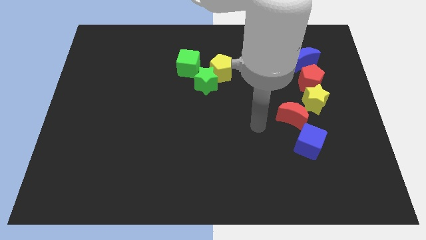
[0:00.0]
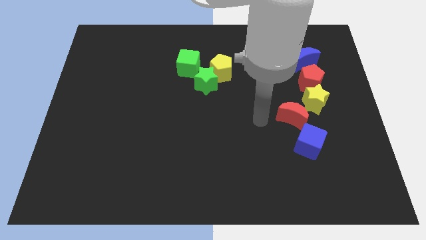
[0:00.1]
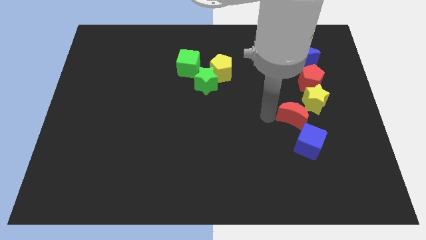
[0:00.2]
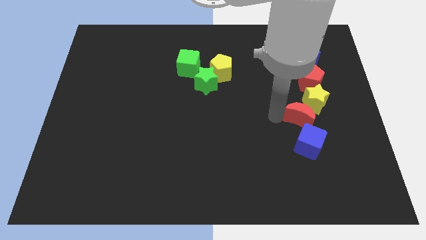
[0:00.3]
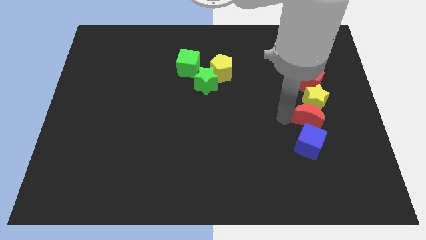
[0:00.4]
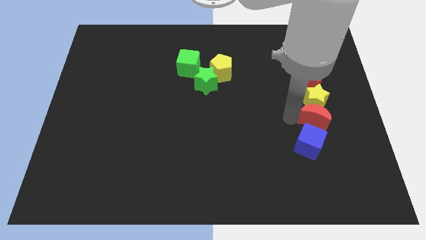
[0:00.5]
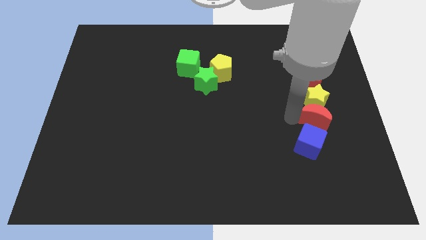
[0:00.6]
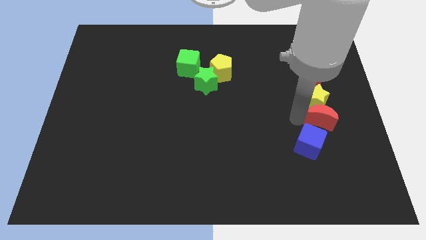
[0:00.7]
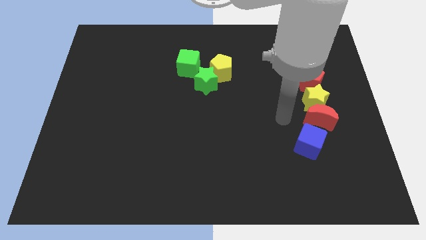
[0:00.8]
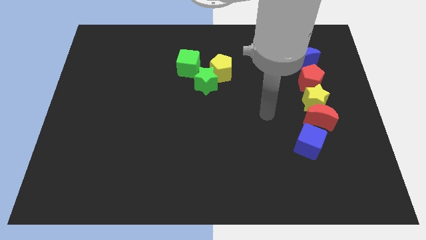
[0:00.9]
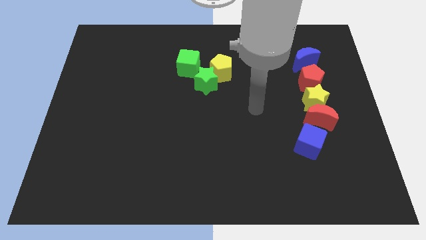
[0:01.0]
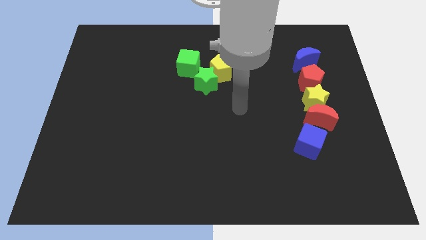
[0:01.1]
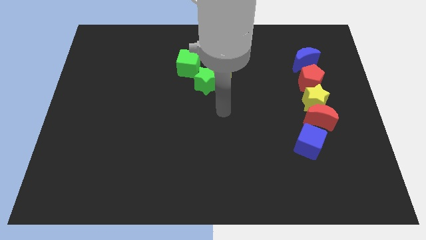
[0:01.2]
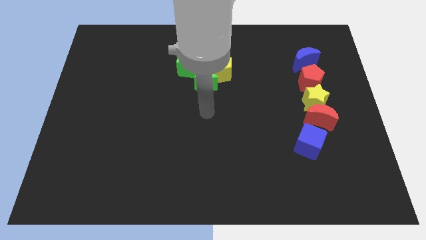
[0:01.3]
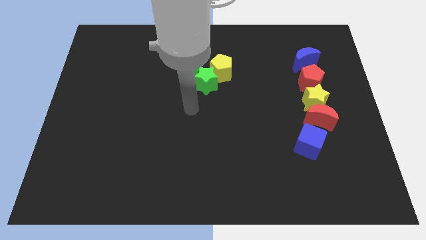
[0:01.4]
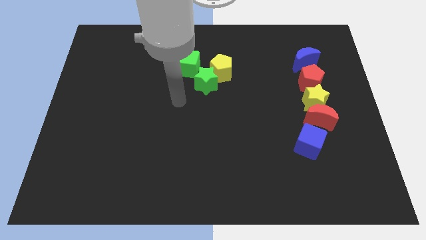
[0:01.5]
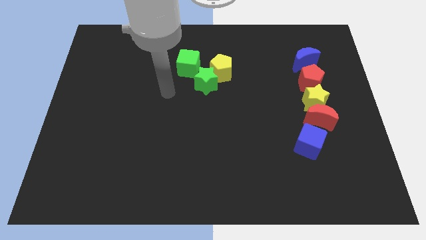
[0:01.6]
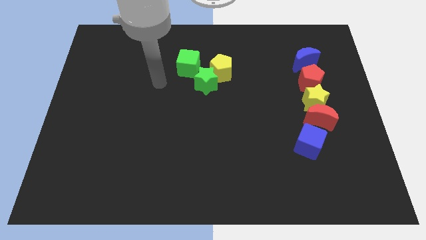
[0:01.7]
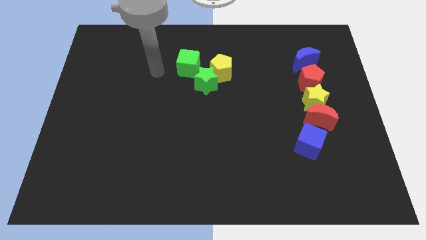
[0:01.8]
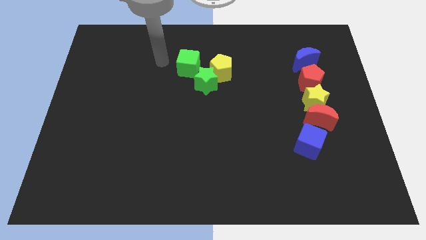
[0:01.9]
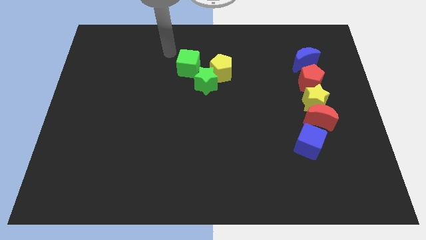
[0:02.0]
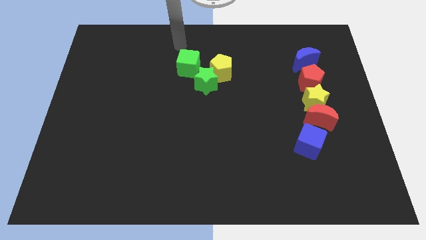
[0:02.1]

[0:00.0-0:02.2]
place the red moon in between the yellow star and the blue cube

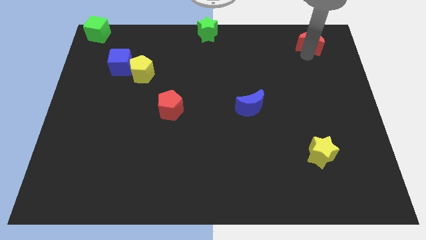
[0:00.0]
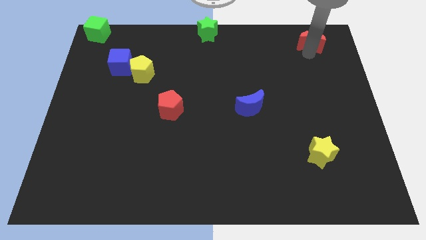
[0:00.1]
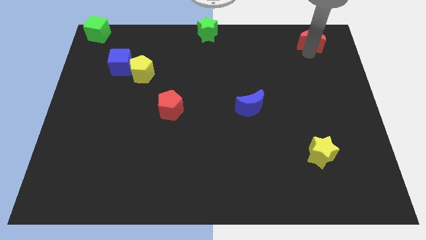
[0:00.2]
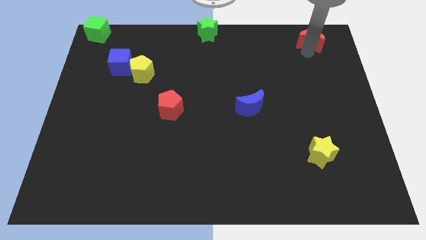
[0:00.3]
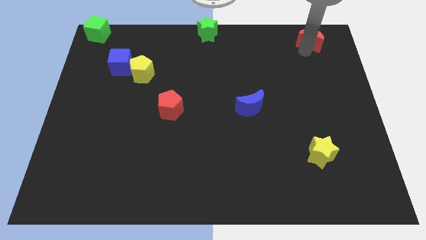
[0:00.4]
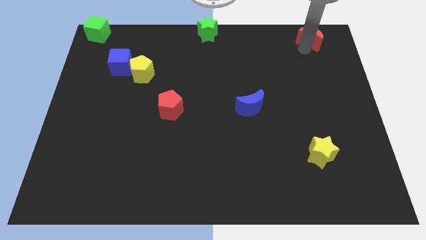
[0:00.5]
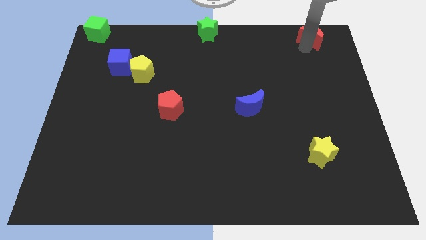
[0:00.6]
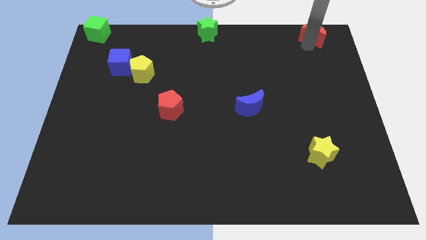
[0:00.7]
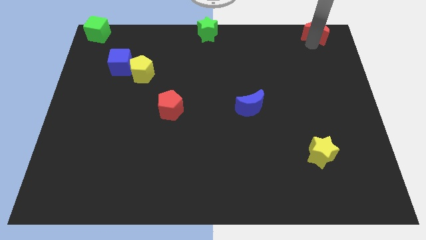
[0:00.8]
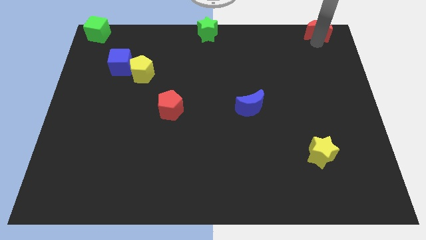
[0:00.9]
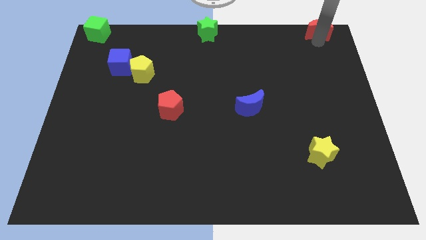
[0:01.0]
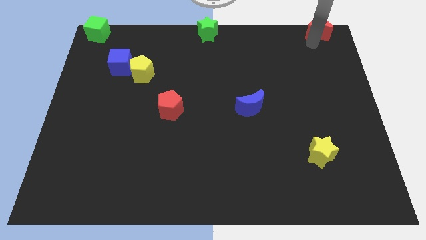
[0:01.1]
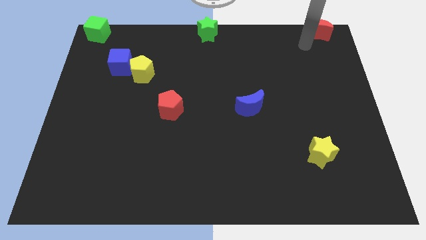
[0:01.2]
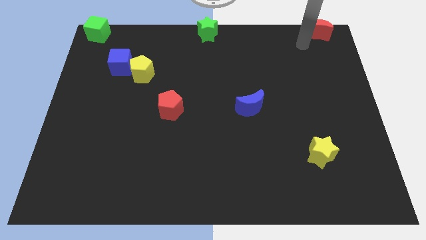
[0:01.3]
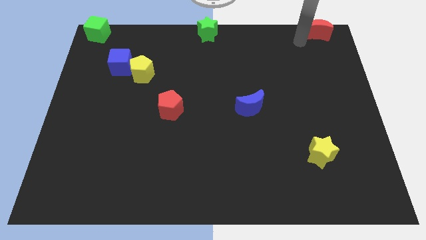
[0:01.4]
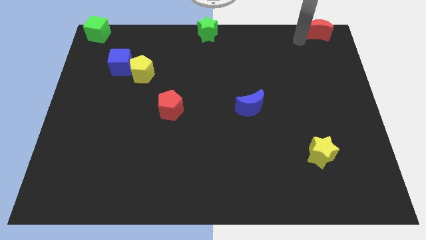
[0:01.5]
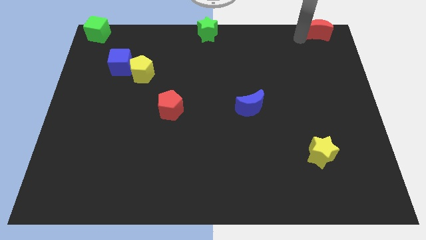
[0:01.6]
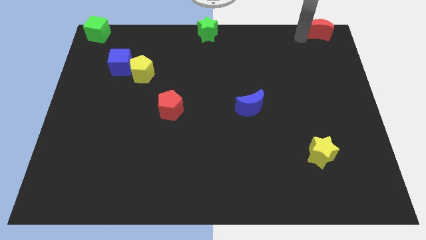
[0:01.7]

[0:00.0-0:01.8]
slide the red moon to the top right

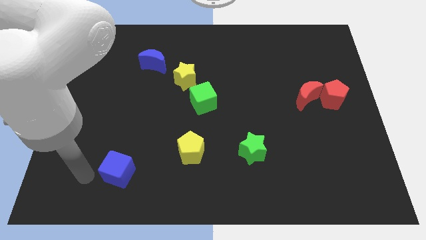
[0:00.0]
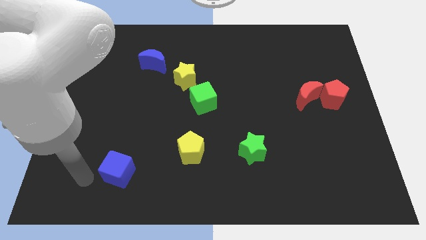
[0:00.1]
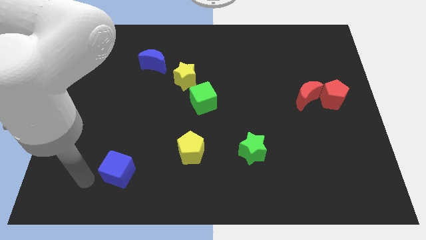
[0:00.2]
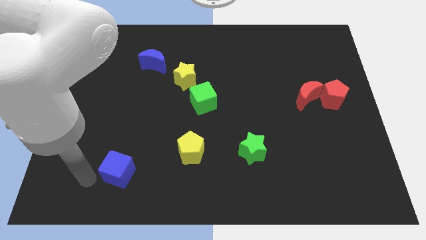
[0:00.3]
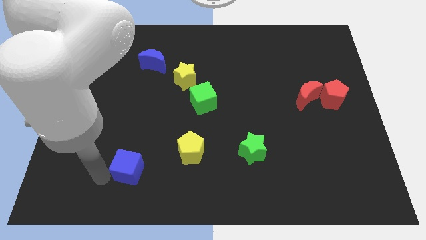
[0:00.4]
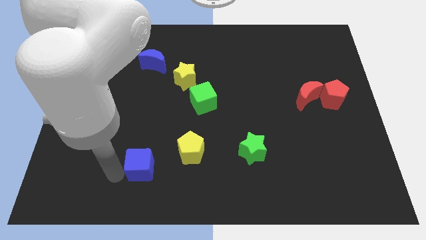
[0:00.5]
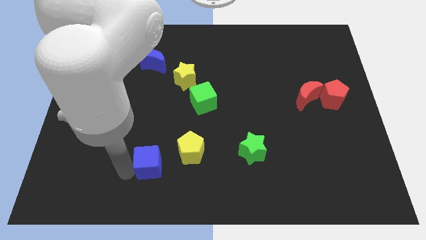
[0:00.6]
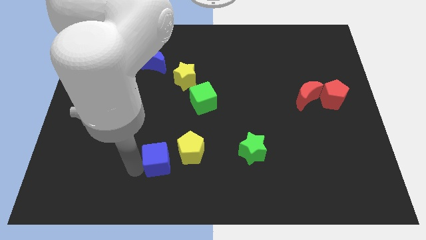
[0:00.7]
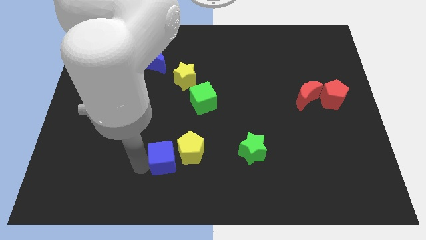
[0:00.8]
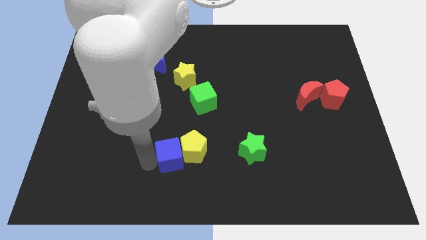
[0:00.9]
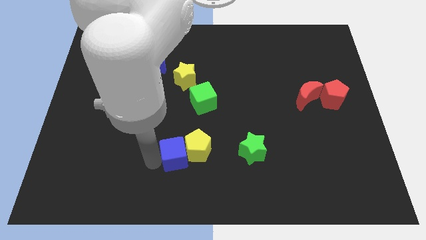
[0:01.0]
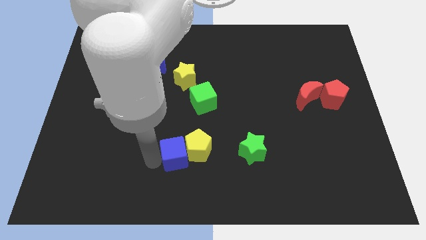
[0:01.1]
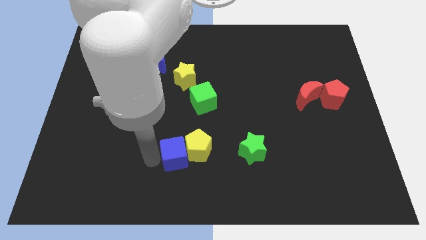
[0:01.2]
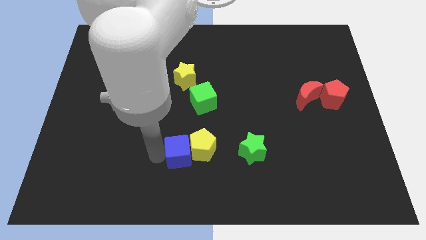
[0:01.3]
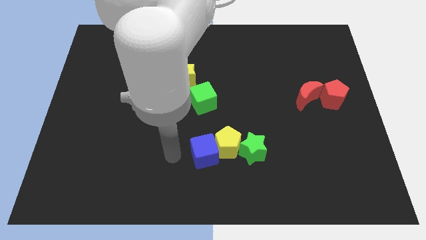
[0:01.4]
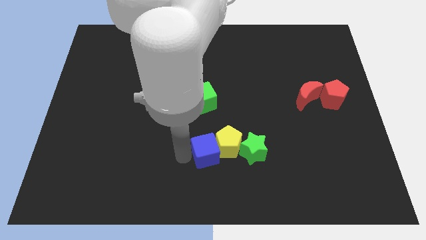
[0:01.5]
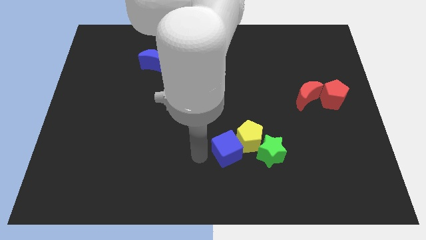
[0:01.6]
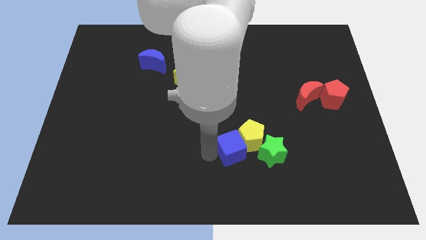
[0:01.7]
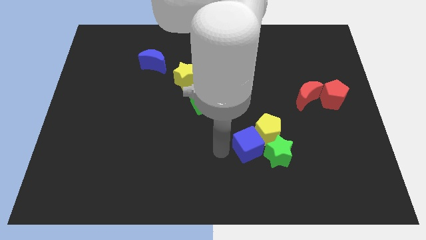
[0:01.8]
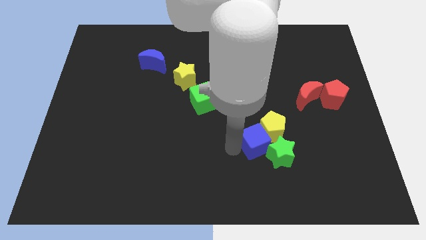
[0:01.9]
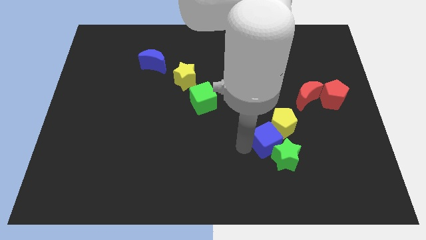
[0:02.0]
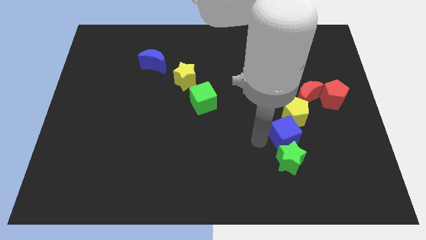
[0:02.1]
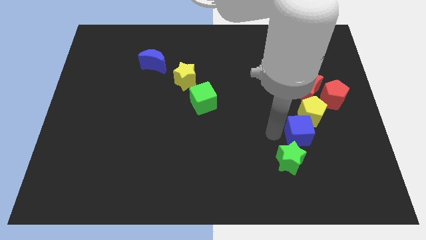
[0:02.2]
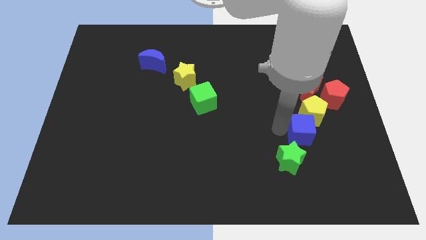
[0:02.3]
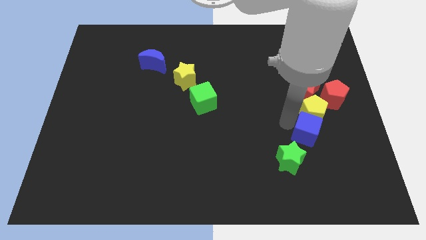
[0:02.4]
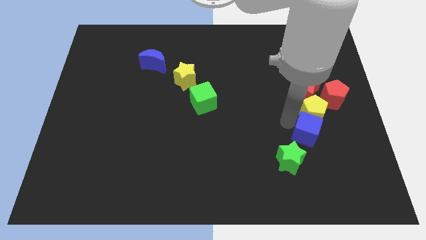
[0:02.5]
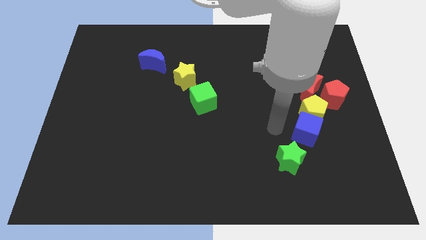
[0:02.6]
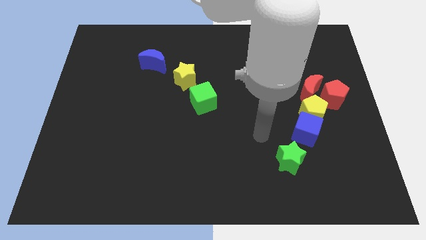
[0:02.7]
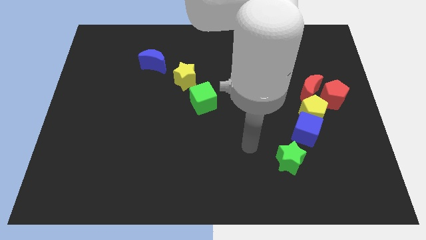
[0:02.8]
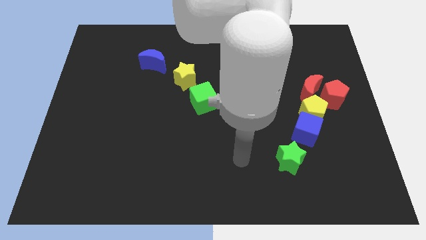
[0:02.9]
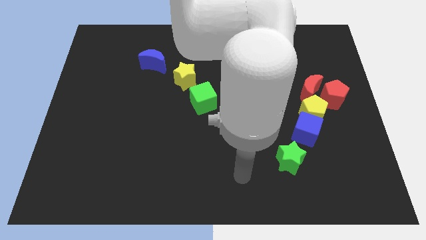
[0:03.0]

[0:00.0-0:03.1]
place the blue cube in between yellow pentagon and green star

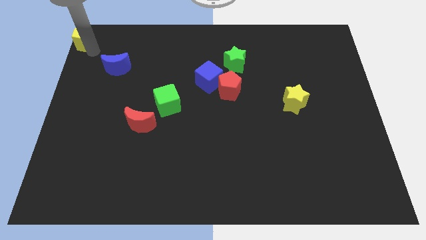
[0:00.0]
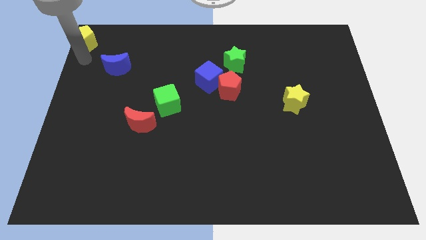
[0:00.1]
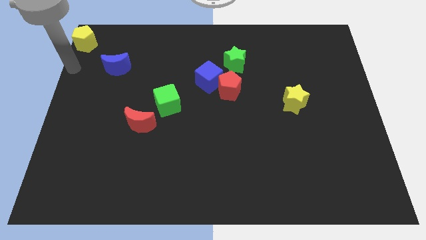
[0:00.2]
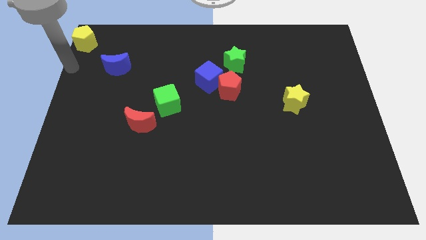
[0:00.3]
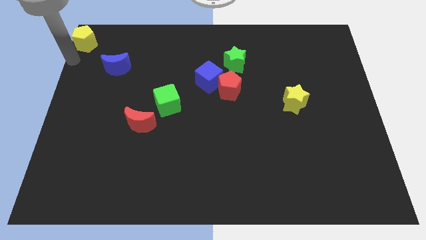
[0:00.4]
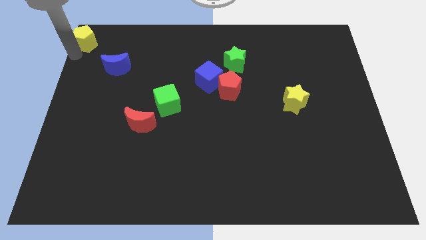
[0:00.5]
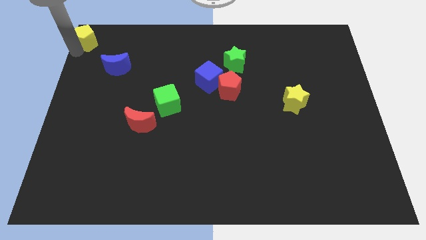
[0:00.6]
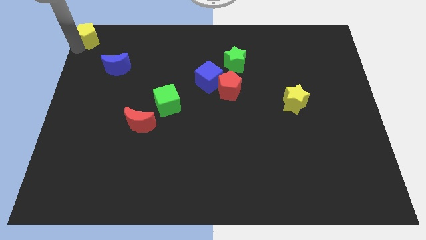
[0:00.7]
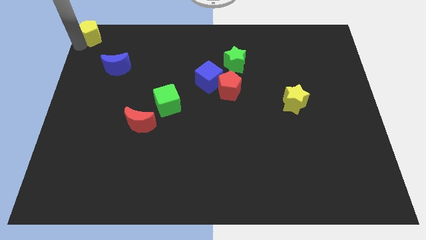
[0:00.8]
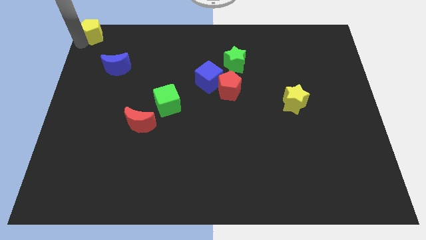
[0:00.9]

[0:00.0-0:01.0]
touch the bottom of yellow pentagon

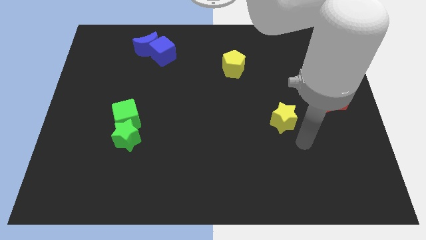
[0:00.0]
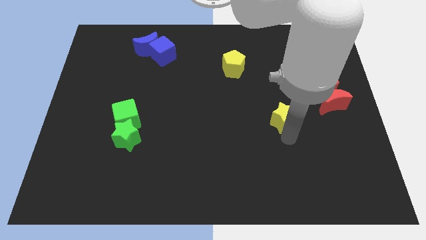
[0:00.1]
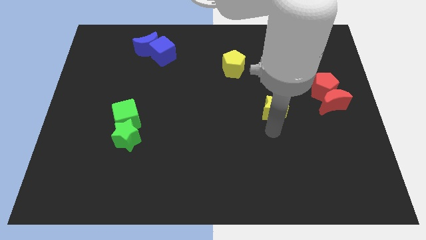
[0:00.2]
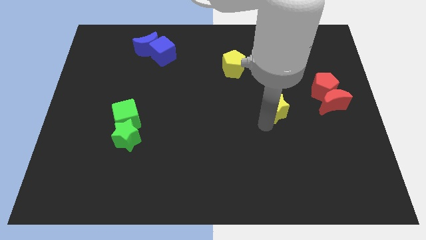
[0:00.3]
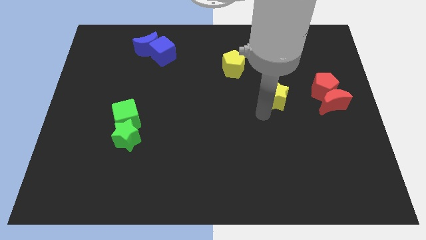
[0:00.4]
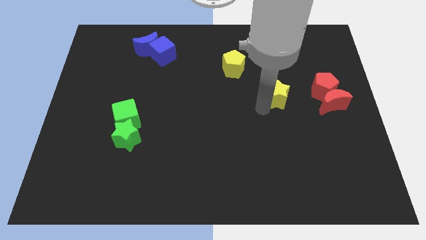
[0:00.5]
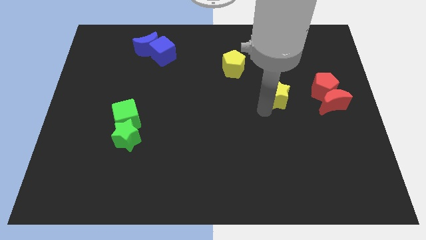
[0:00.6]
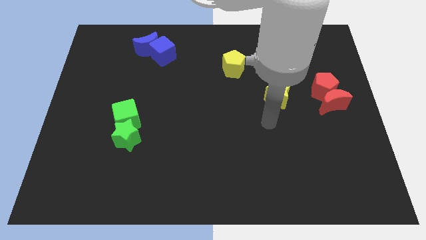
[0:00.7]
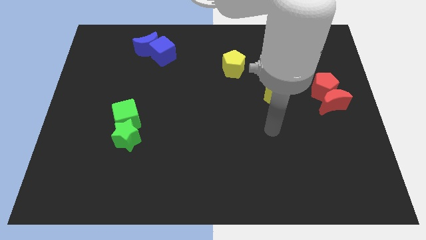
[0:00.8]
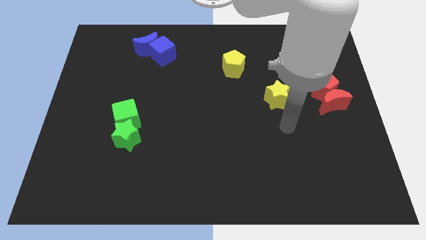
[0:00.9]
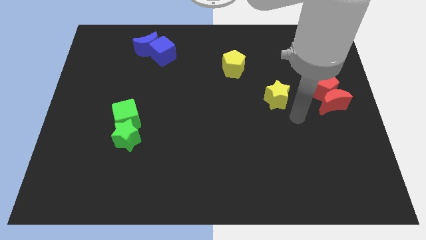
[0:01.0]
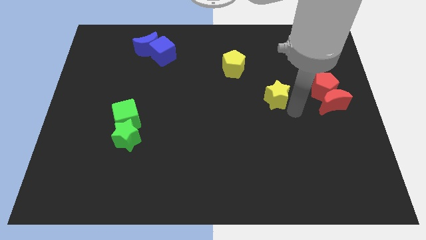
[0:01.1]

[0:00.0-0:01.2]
drag the yellow star slightly upwards
